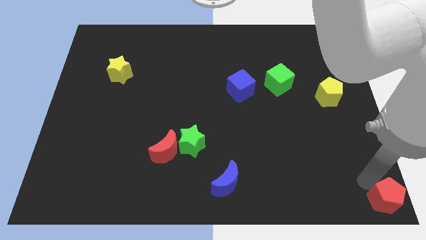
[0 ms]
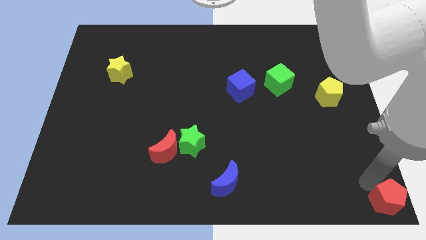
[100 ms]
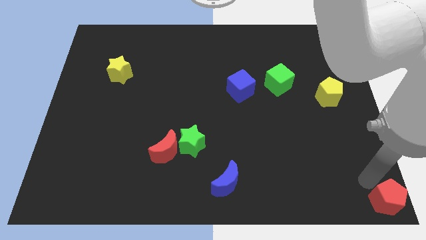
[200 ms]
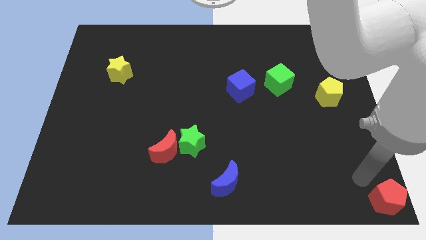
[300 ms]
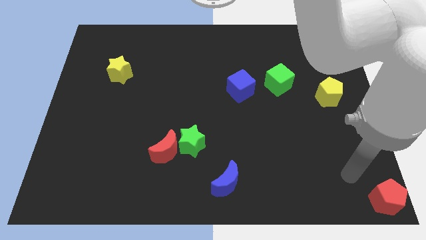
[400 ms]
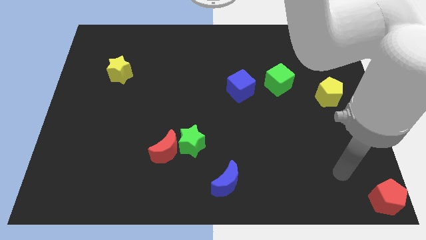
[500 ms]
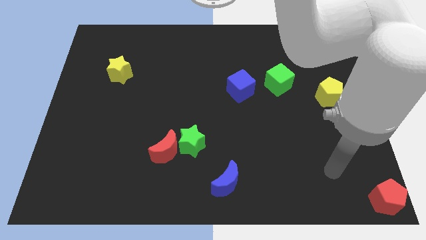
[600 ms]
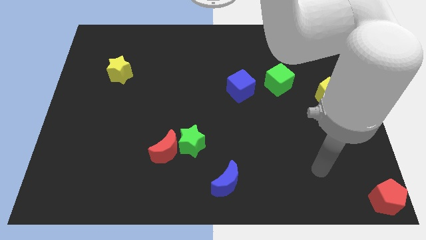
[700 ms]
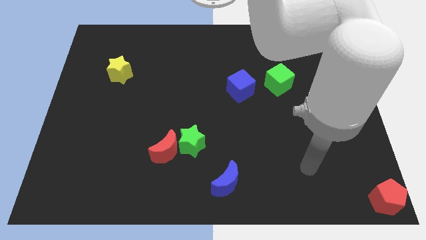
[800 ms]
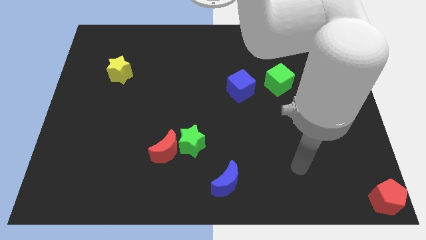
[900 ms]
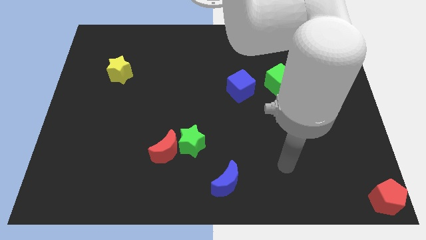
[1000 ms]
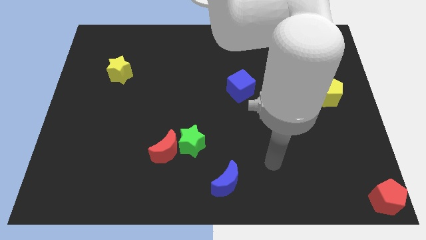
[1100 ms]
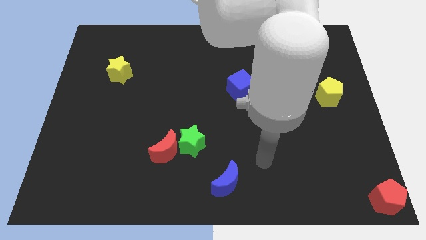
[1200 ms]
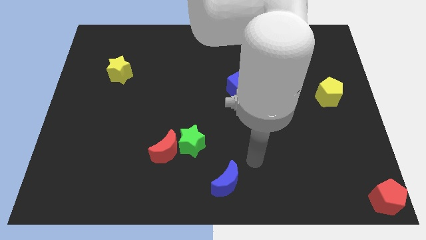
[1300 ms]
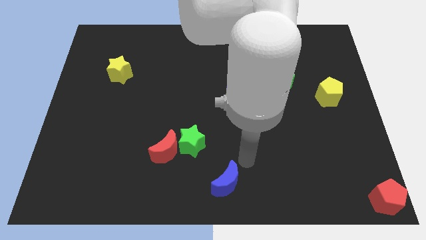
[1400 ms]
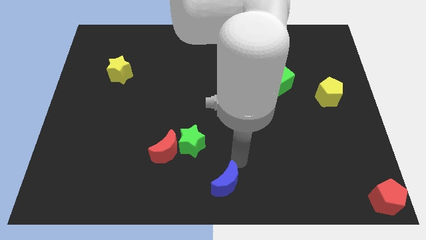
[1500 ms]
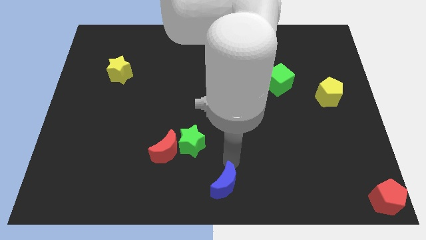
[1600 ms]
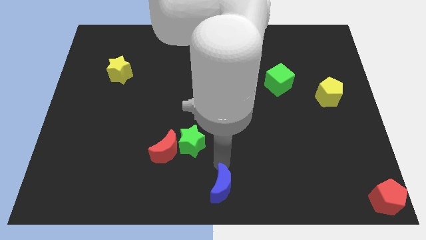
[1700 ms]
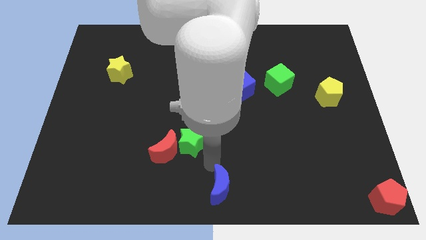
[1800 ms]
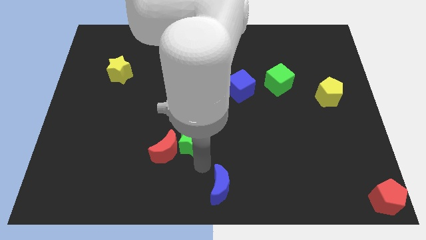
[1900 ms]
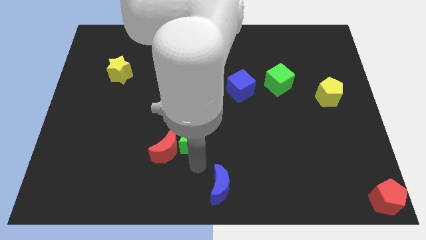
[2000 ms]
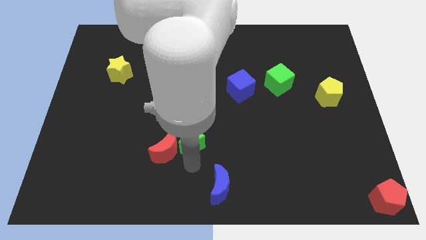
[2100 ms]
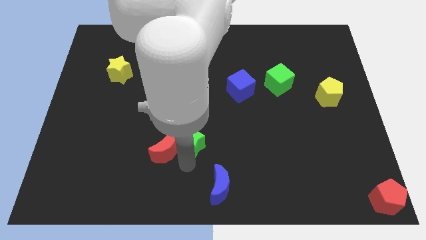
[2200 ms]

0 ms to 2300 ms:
slightly push the blue crescent to the bottom center of the board

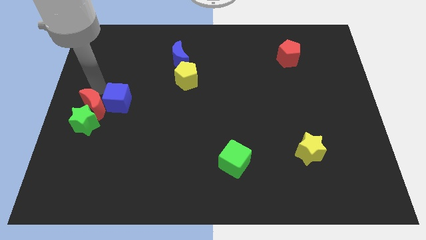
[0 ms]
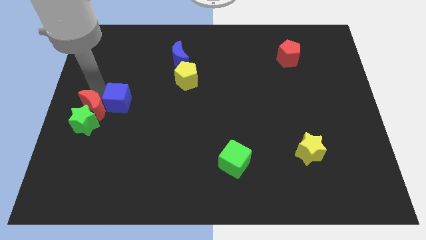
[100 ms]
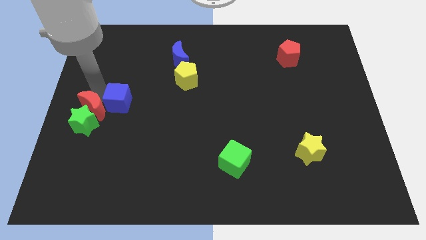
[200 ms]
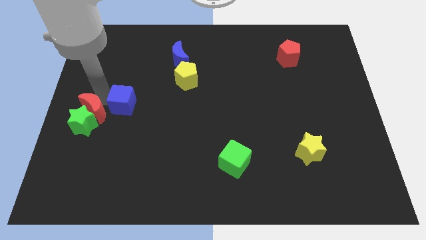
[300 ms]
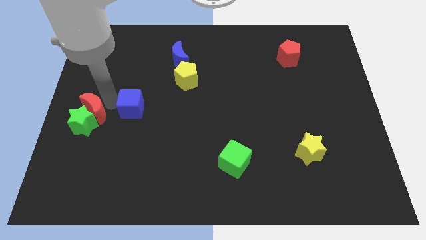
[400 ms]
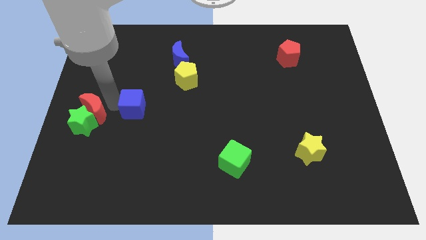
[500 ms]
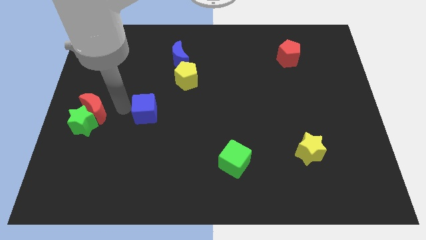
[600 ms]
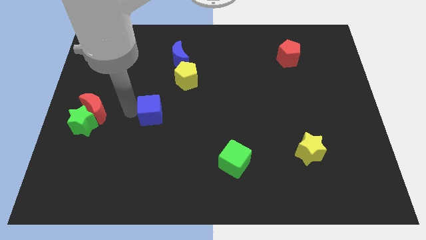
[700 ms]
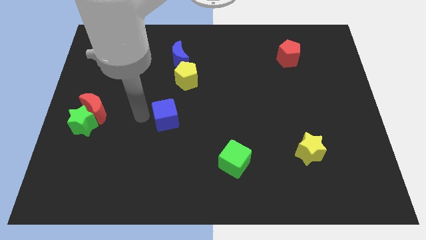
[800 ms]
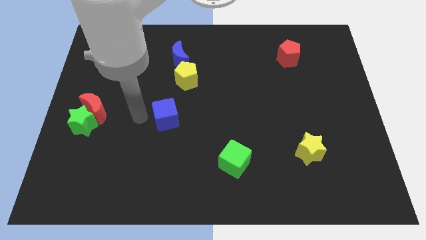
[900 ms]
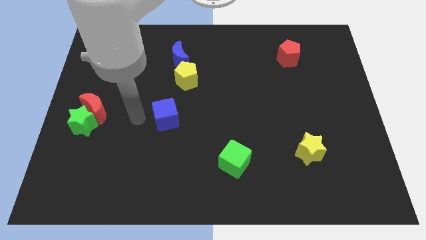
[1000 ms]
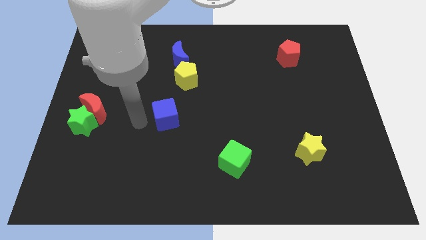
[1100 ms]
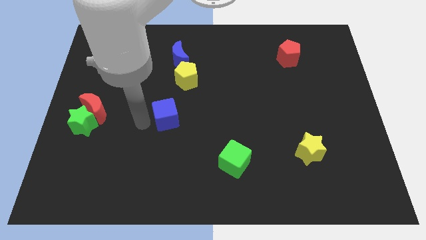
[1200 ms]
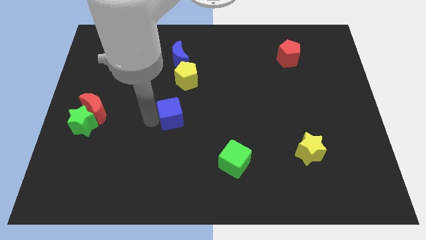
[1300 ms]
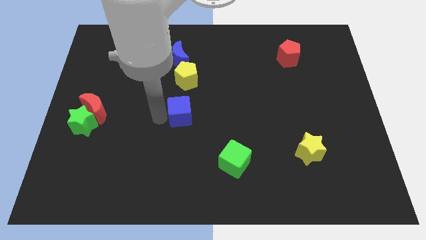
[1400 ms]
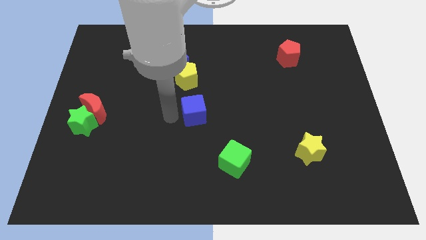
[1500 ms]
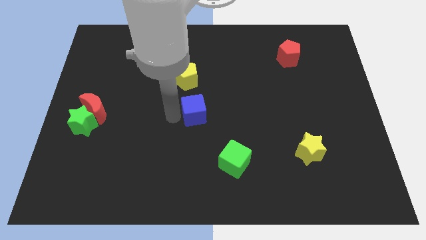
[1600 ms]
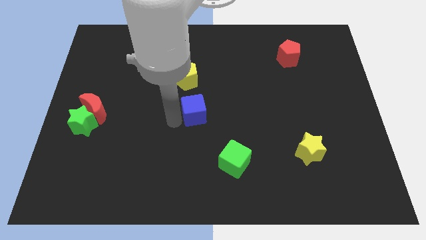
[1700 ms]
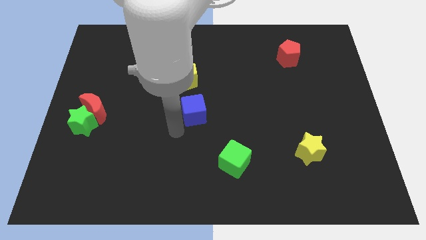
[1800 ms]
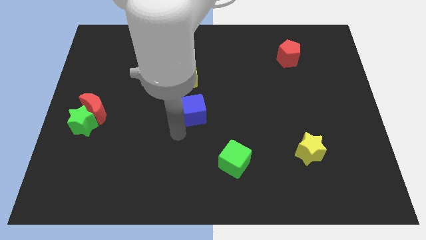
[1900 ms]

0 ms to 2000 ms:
move the blue cube towards the center of board

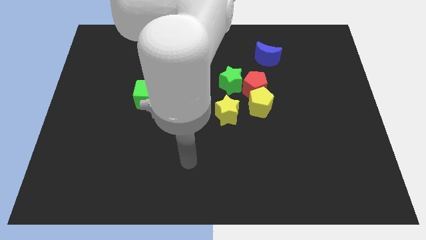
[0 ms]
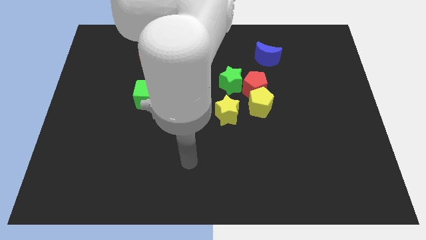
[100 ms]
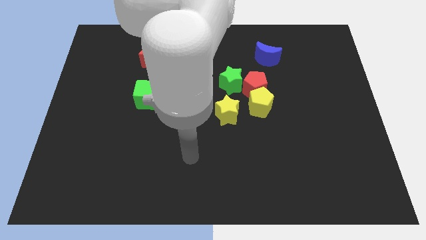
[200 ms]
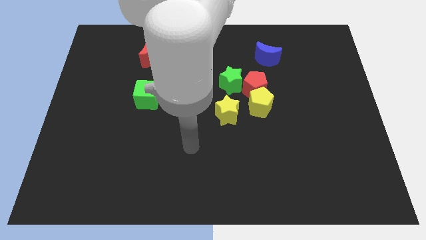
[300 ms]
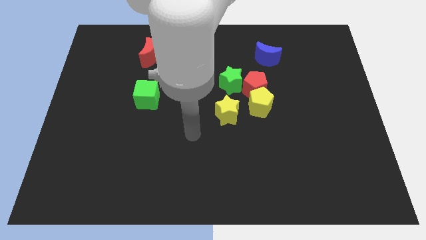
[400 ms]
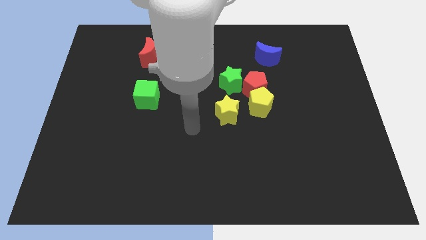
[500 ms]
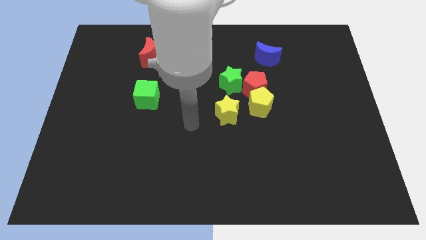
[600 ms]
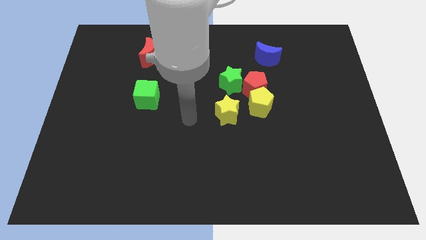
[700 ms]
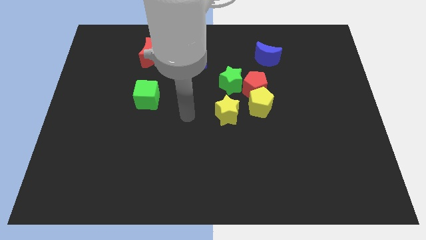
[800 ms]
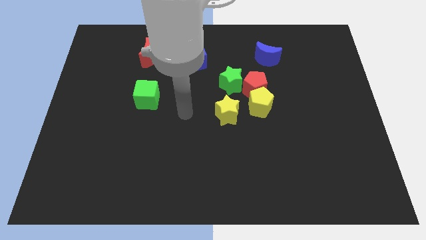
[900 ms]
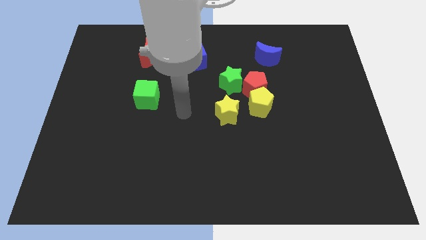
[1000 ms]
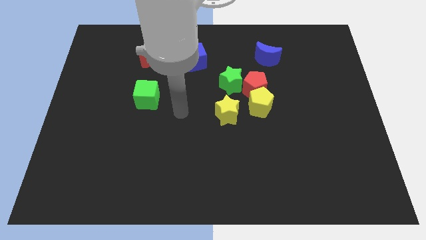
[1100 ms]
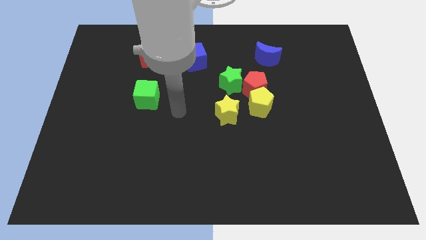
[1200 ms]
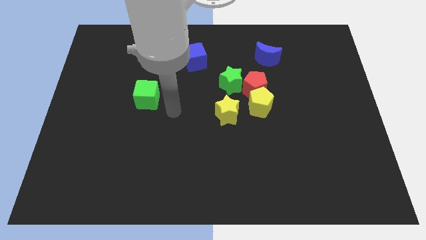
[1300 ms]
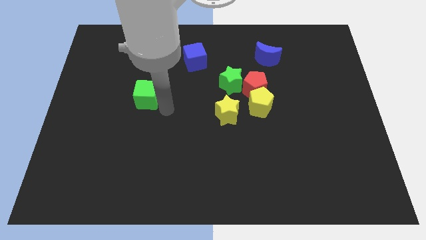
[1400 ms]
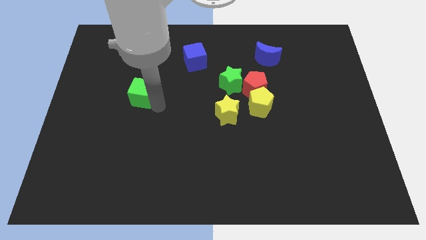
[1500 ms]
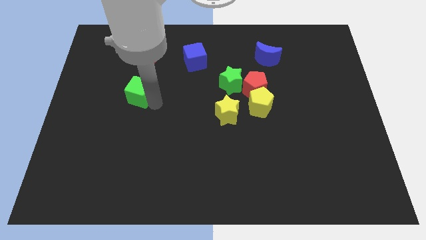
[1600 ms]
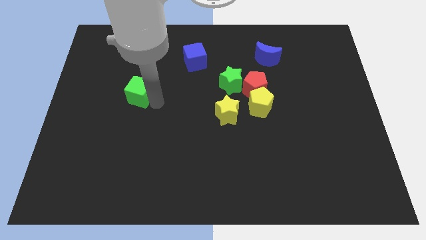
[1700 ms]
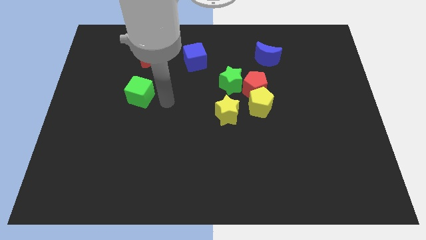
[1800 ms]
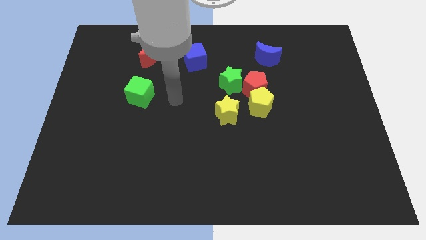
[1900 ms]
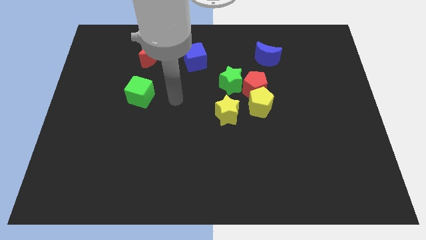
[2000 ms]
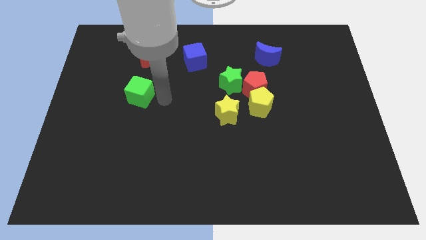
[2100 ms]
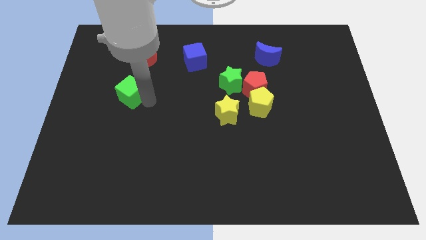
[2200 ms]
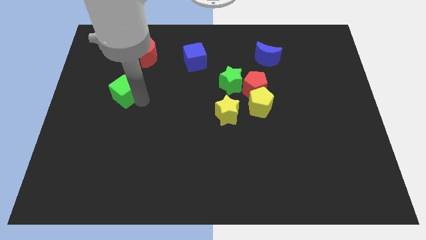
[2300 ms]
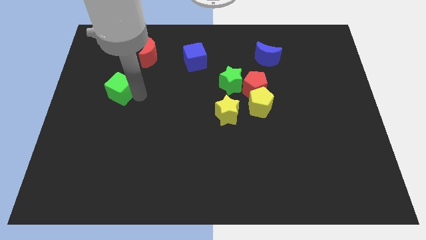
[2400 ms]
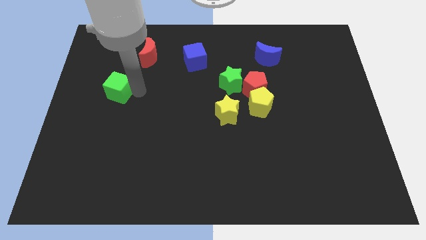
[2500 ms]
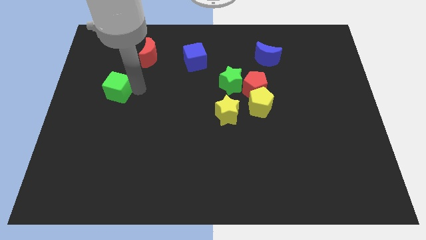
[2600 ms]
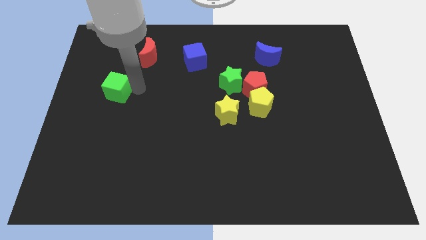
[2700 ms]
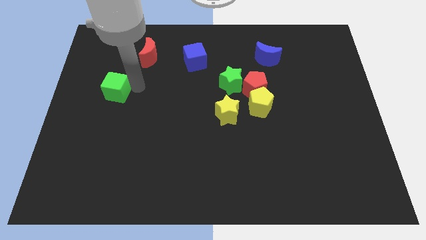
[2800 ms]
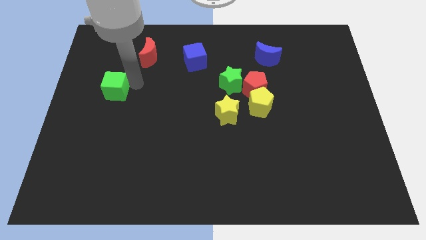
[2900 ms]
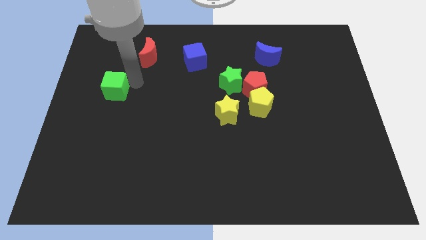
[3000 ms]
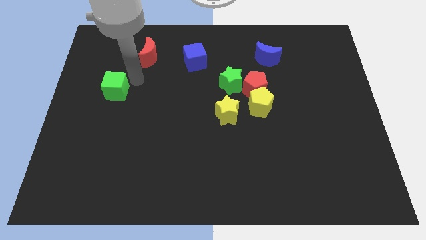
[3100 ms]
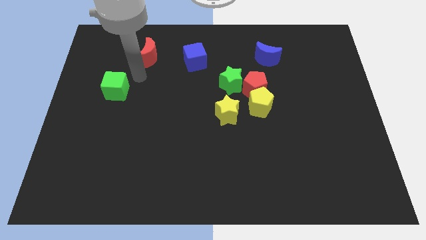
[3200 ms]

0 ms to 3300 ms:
push the green cube to the bottom left of the red crescent

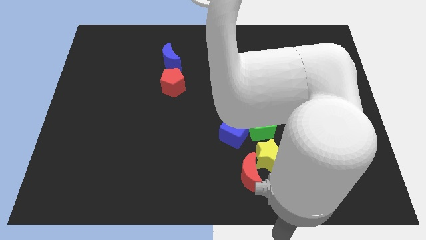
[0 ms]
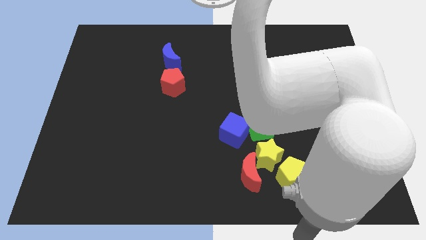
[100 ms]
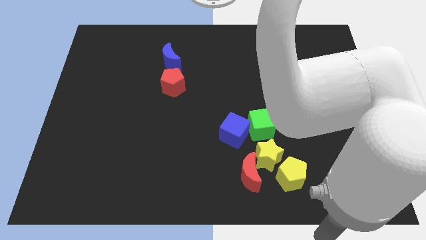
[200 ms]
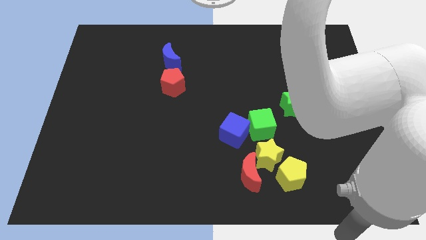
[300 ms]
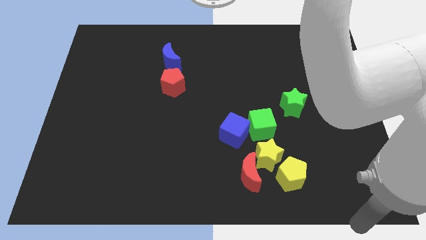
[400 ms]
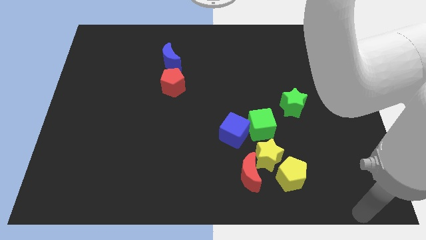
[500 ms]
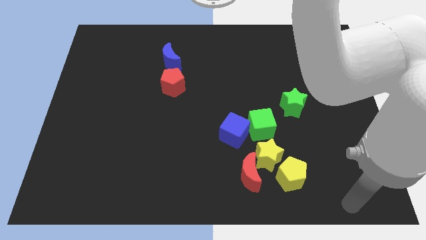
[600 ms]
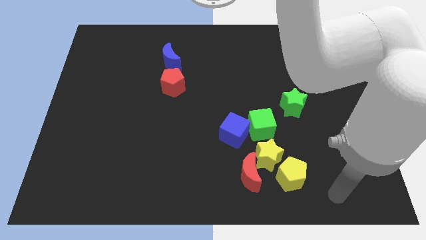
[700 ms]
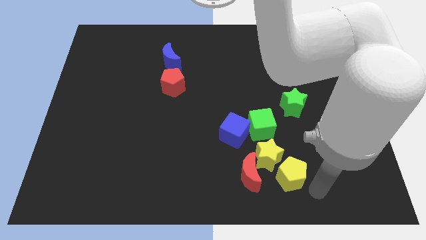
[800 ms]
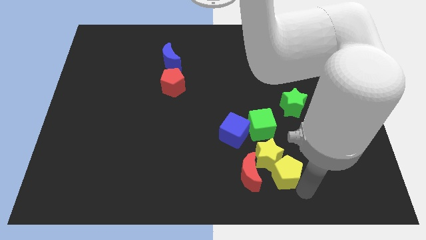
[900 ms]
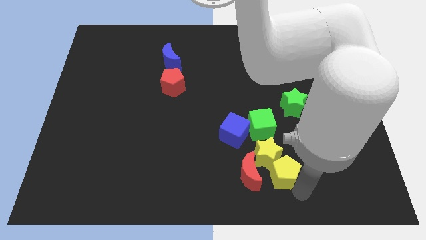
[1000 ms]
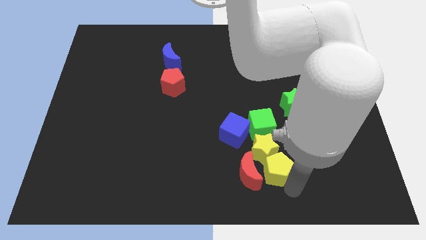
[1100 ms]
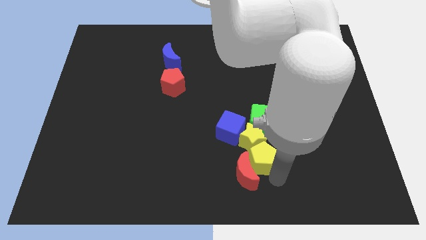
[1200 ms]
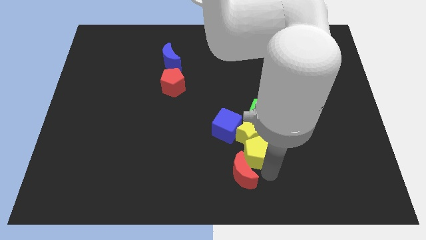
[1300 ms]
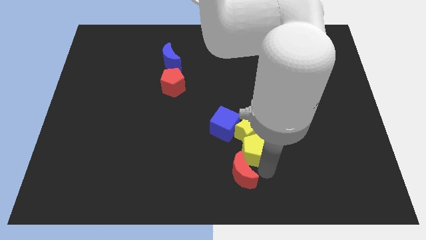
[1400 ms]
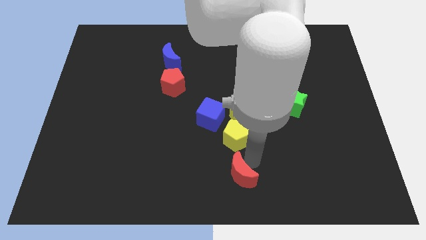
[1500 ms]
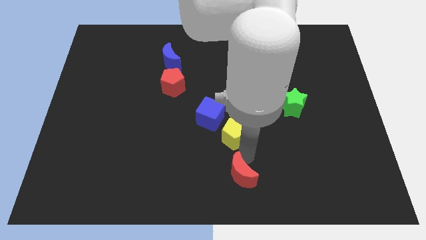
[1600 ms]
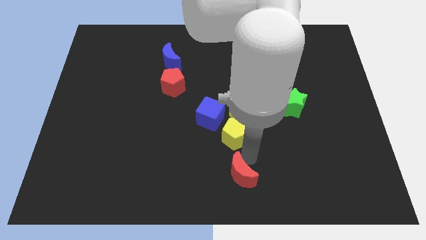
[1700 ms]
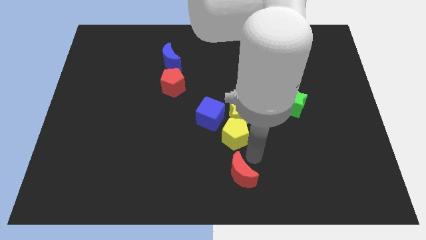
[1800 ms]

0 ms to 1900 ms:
push the yellow pentagon into the yellow star
